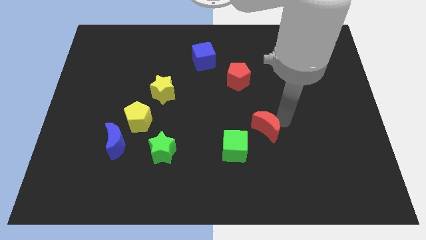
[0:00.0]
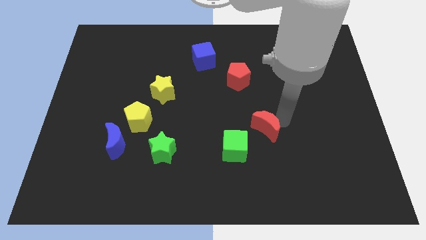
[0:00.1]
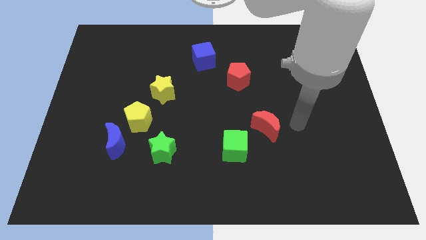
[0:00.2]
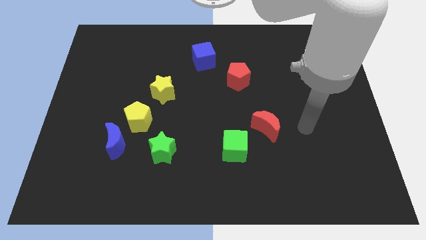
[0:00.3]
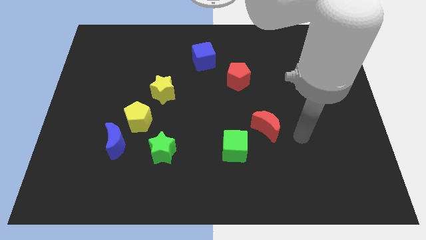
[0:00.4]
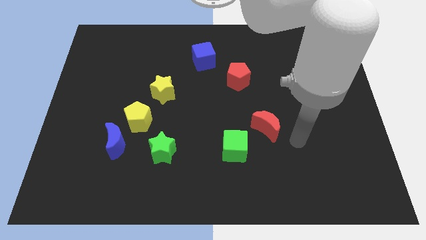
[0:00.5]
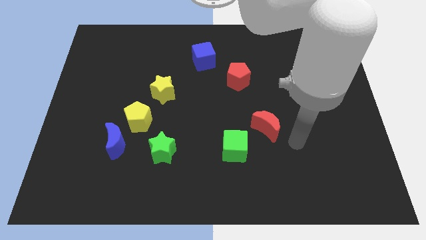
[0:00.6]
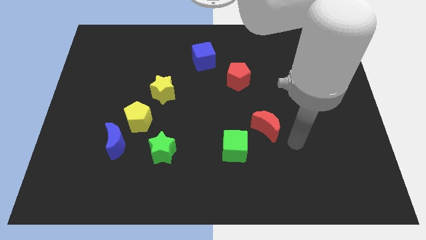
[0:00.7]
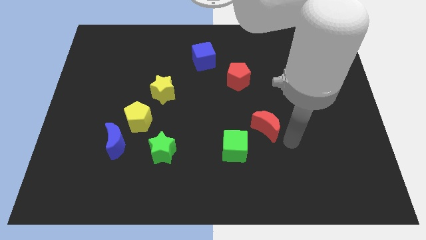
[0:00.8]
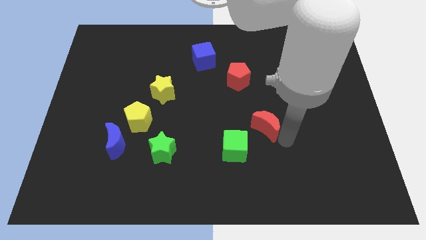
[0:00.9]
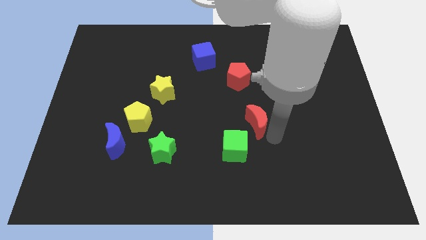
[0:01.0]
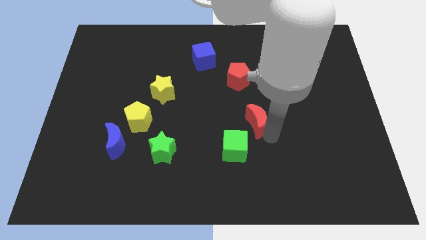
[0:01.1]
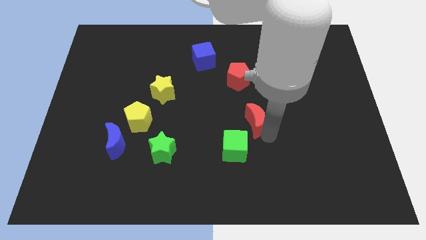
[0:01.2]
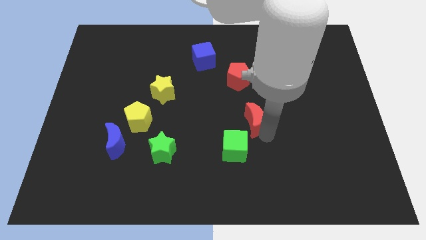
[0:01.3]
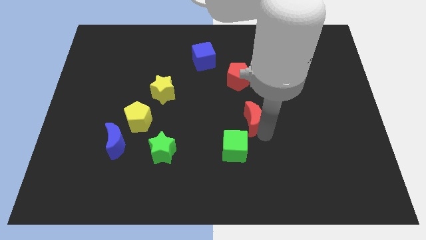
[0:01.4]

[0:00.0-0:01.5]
place red moon above the green cube

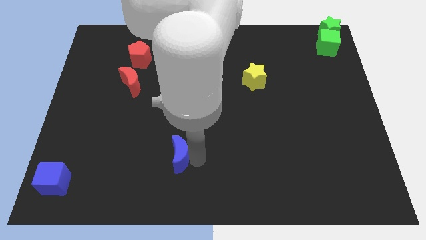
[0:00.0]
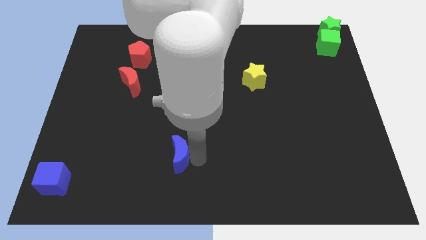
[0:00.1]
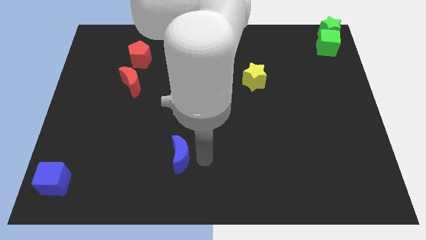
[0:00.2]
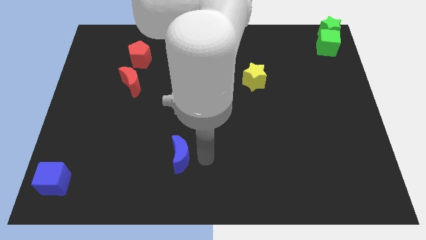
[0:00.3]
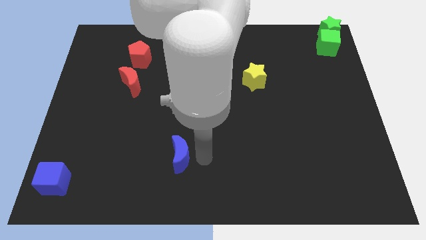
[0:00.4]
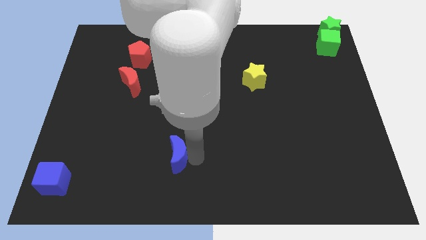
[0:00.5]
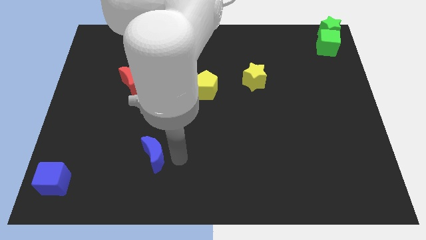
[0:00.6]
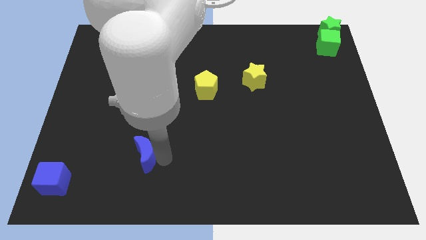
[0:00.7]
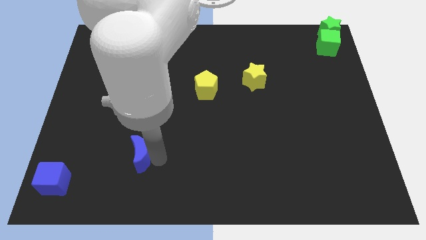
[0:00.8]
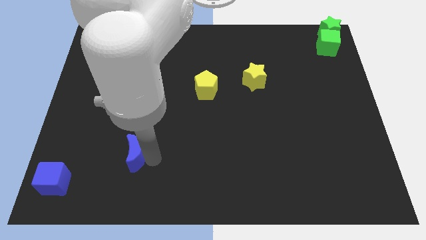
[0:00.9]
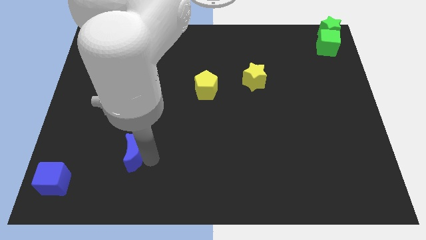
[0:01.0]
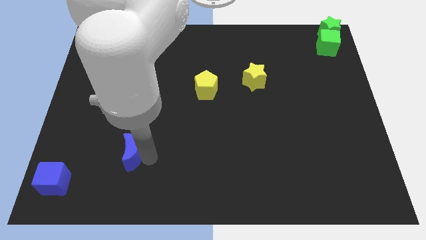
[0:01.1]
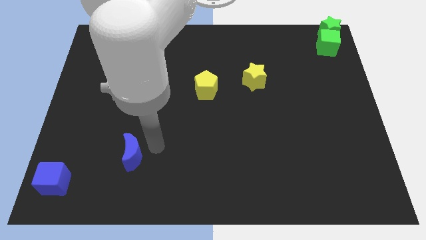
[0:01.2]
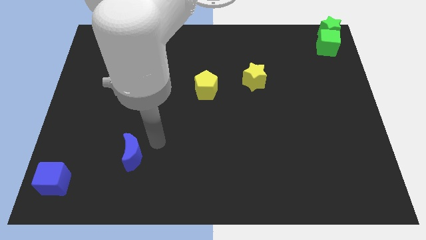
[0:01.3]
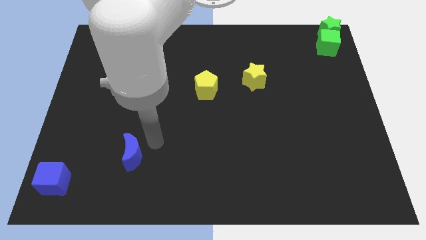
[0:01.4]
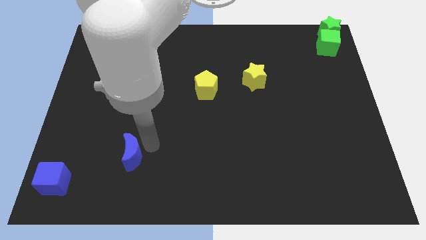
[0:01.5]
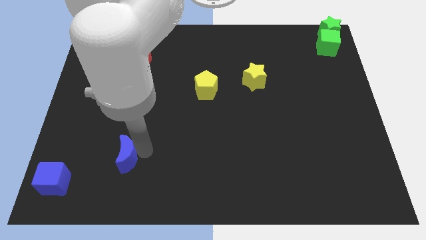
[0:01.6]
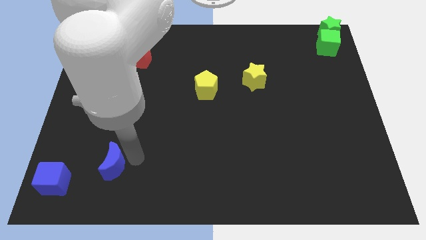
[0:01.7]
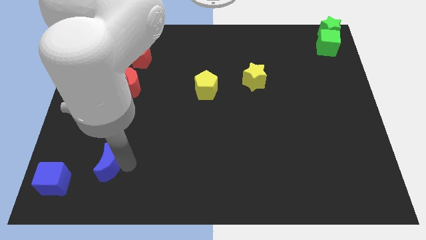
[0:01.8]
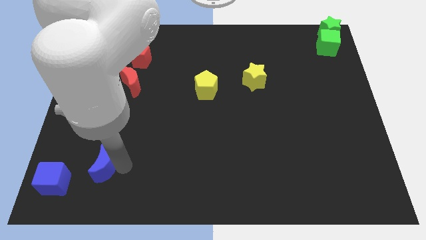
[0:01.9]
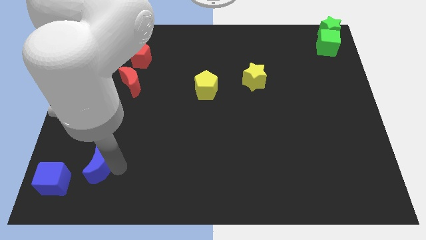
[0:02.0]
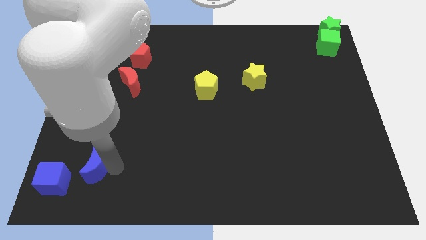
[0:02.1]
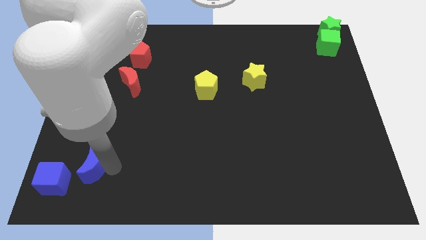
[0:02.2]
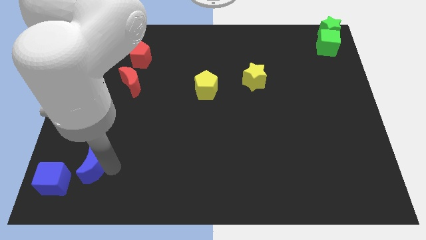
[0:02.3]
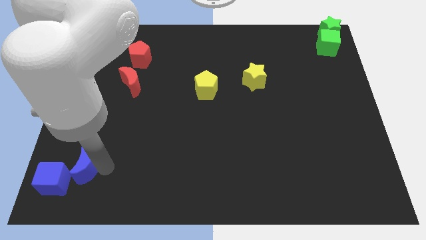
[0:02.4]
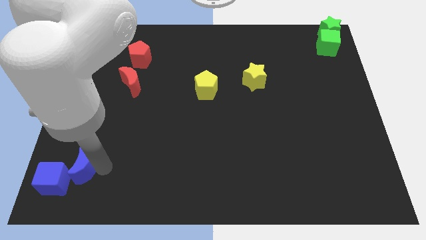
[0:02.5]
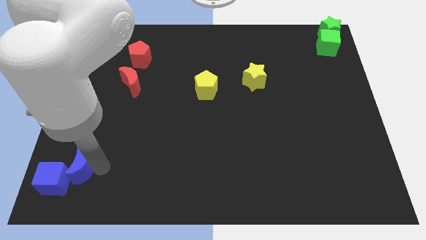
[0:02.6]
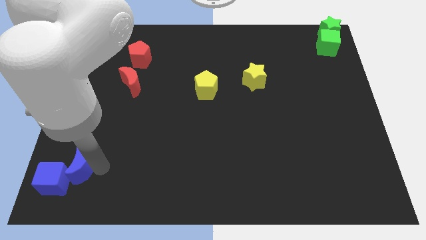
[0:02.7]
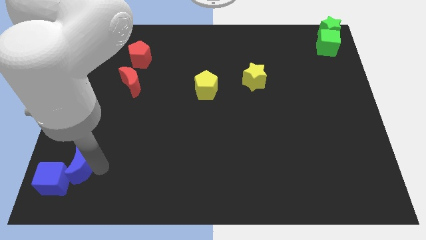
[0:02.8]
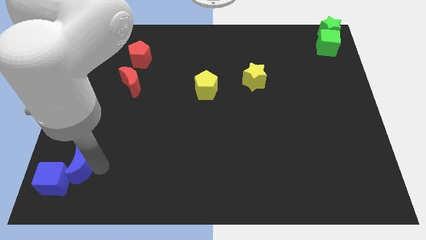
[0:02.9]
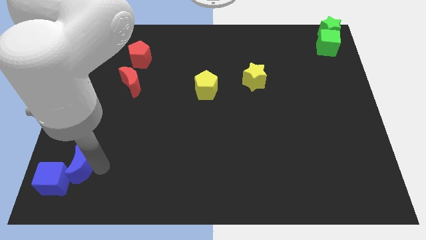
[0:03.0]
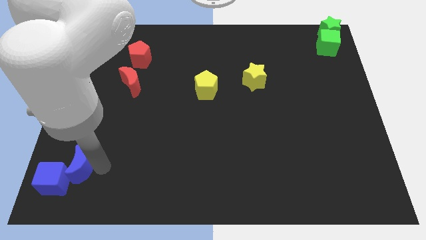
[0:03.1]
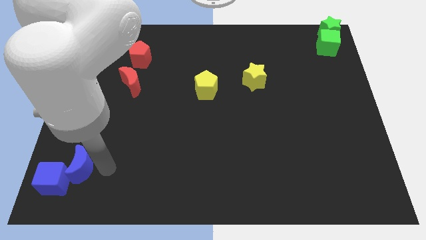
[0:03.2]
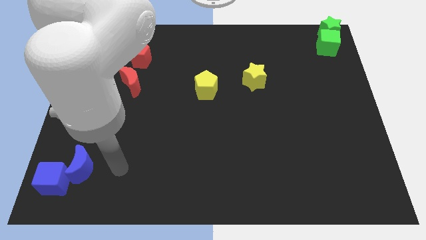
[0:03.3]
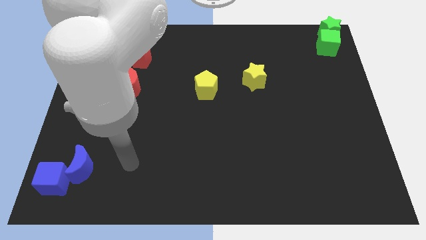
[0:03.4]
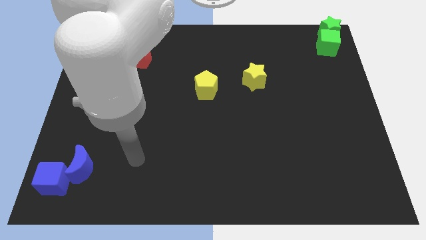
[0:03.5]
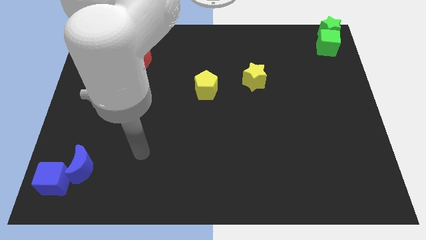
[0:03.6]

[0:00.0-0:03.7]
place the blue moon at the top right side of blue cube

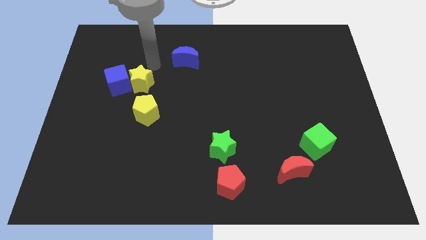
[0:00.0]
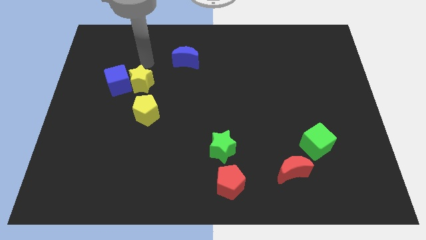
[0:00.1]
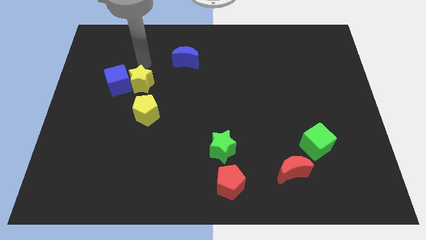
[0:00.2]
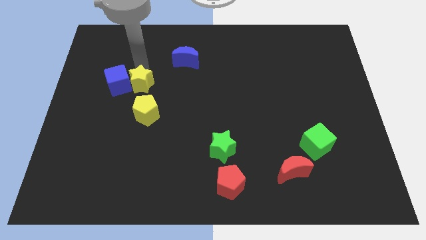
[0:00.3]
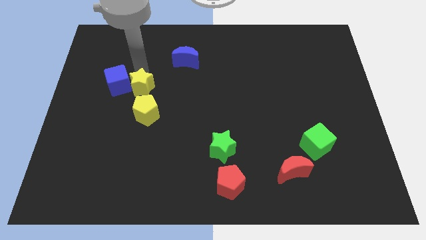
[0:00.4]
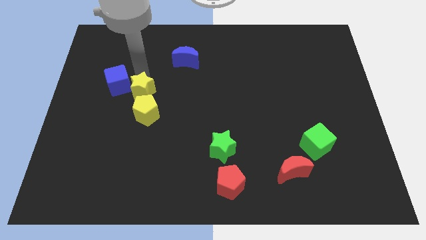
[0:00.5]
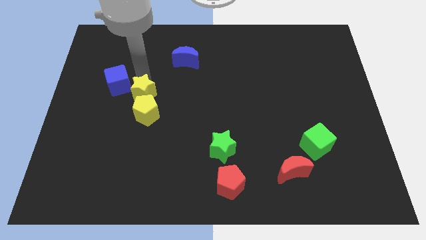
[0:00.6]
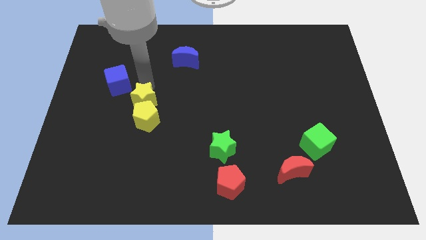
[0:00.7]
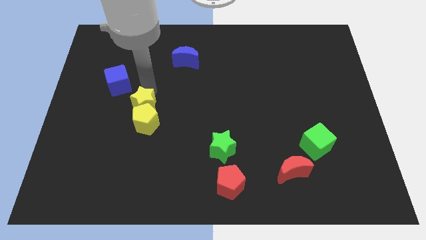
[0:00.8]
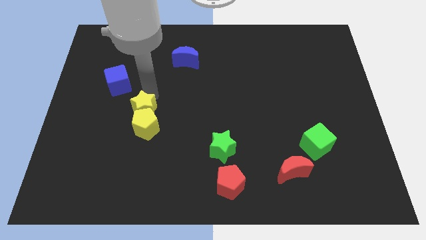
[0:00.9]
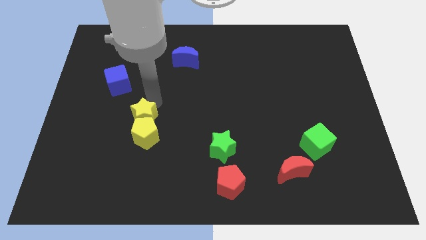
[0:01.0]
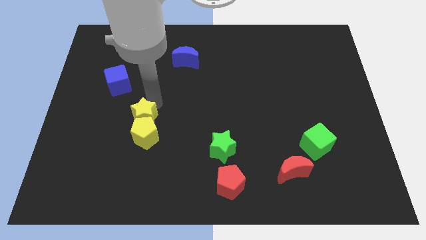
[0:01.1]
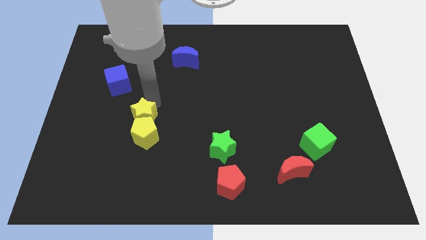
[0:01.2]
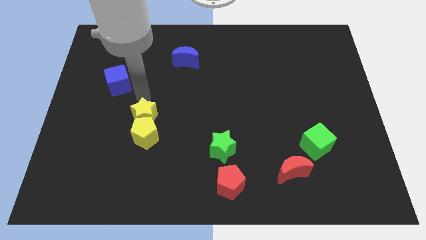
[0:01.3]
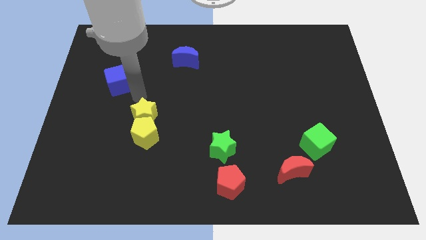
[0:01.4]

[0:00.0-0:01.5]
push the yellow star into the yellow pentagon

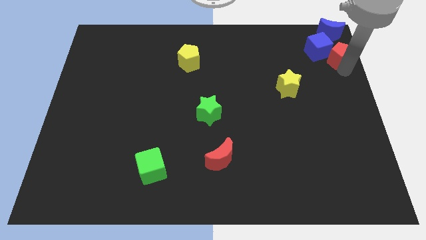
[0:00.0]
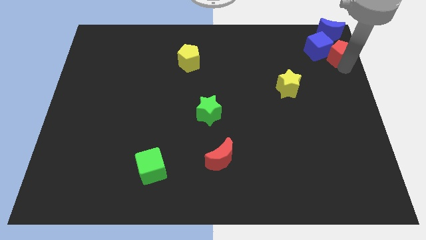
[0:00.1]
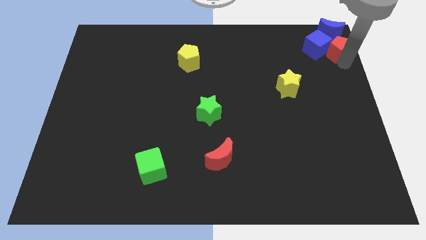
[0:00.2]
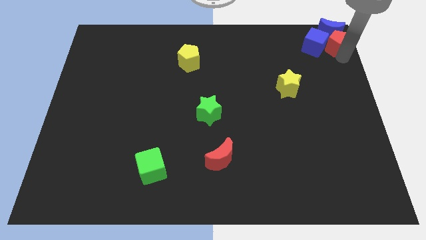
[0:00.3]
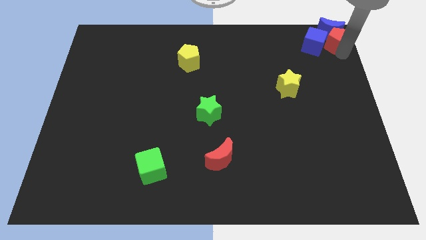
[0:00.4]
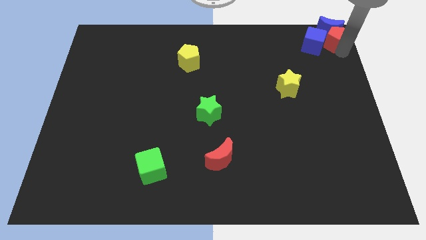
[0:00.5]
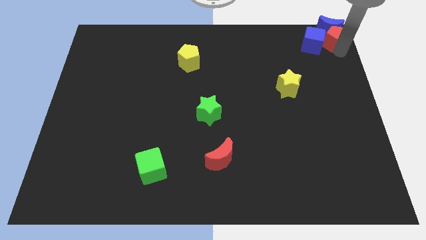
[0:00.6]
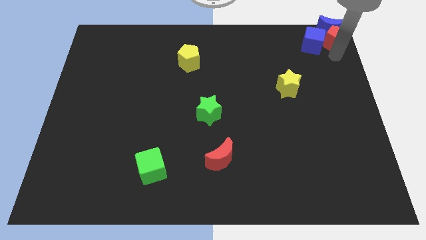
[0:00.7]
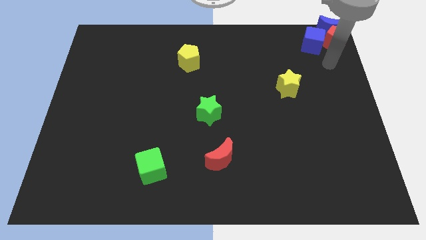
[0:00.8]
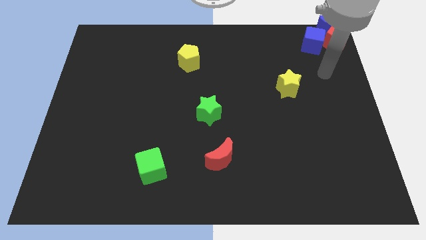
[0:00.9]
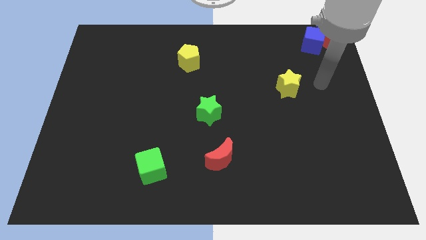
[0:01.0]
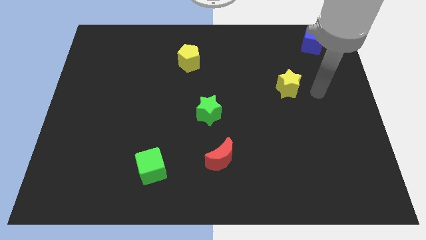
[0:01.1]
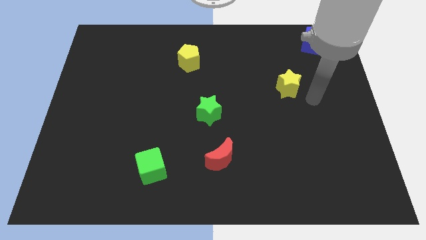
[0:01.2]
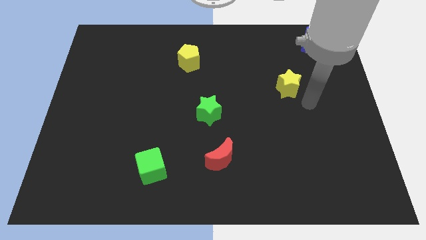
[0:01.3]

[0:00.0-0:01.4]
move blue cube and red pentagon below the blue moon

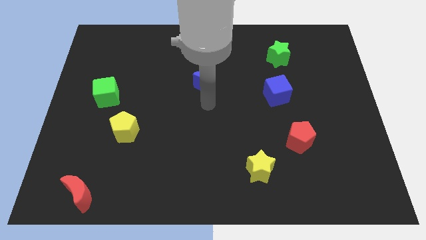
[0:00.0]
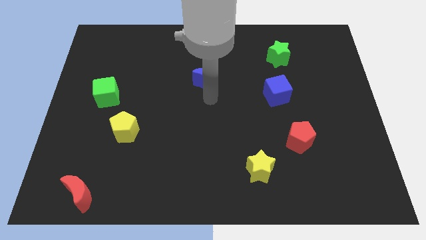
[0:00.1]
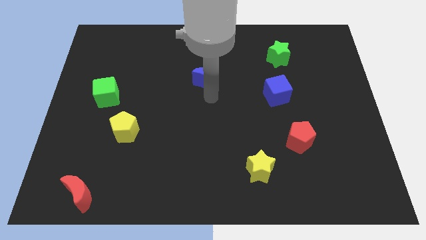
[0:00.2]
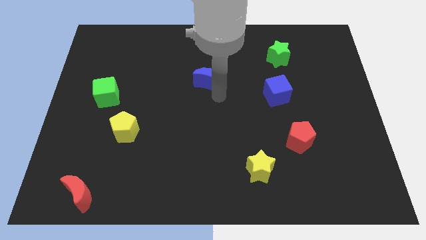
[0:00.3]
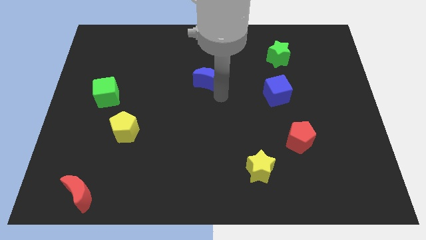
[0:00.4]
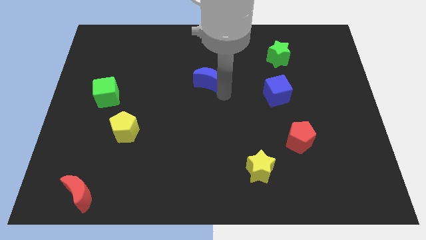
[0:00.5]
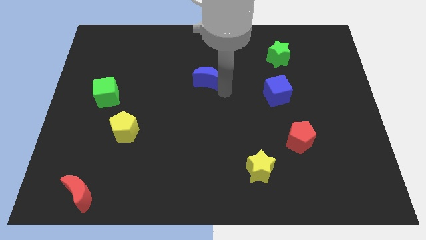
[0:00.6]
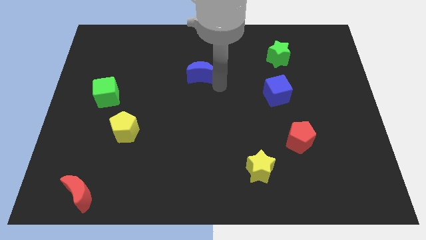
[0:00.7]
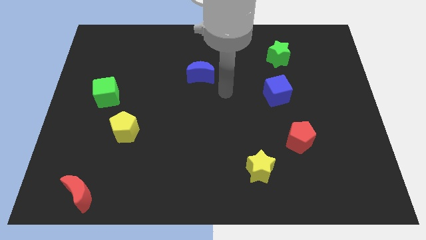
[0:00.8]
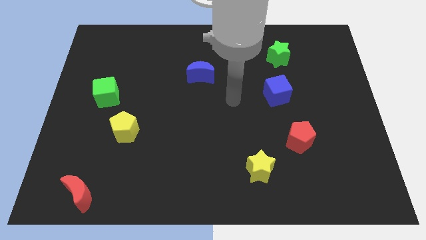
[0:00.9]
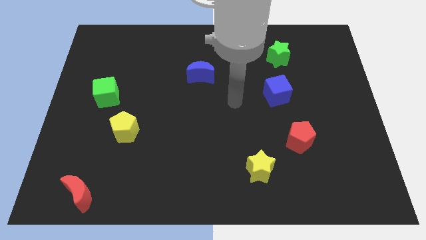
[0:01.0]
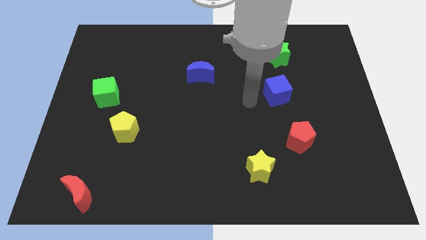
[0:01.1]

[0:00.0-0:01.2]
move blue moon slightly up
